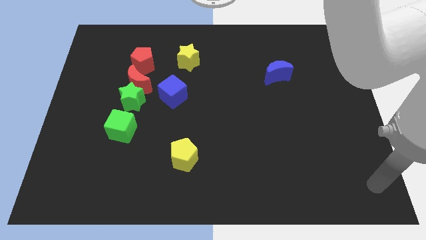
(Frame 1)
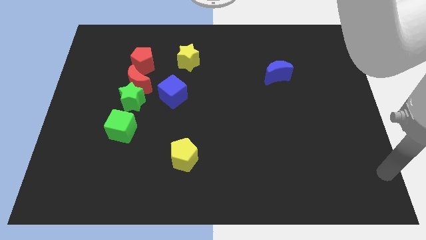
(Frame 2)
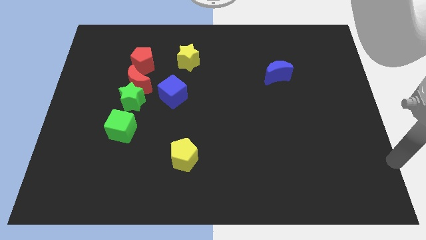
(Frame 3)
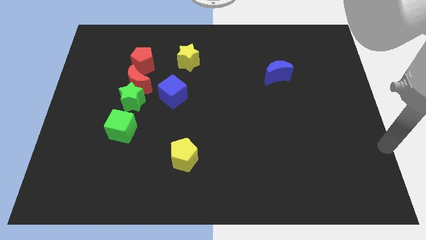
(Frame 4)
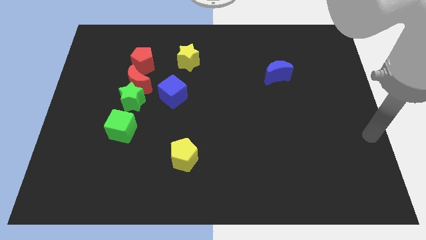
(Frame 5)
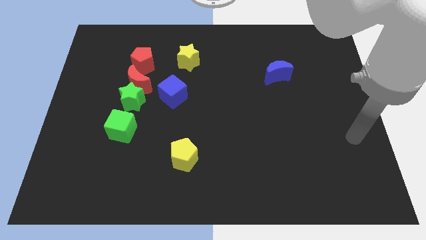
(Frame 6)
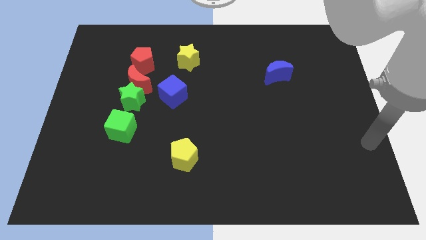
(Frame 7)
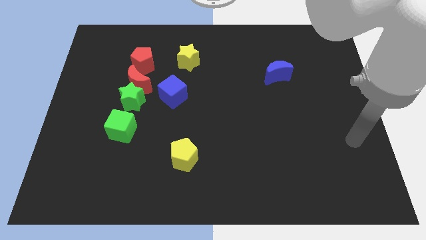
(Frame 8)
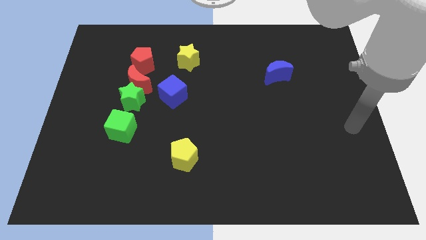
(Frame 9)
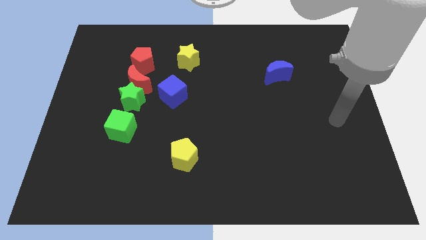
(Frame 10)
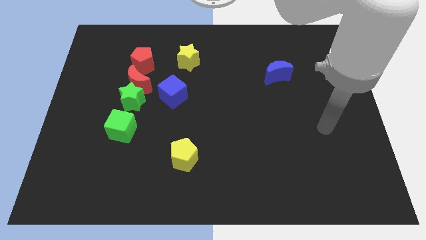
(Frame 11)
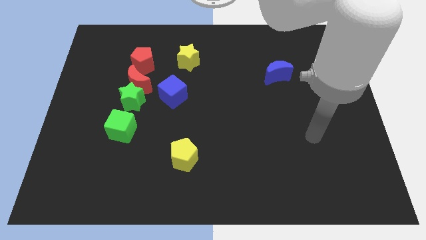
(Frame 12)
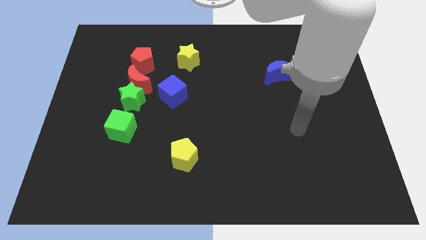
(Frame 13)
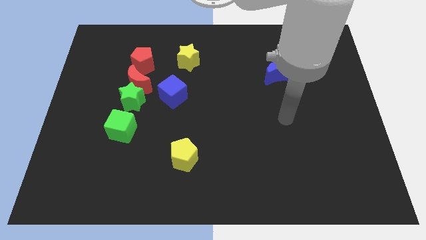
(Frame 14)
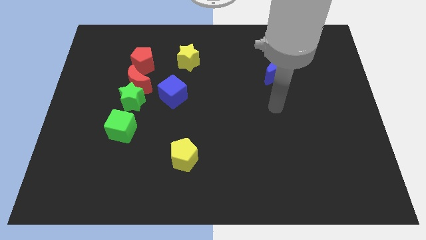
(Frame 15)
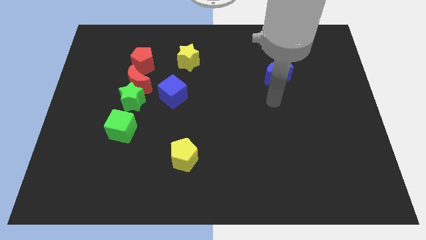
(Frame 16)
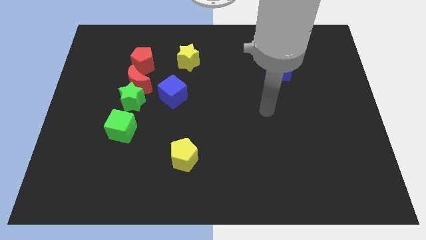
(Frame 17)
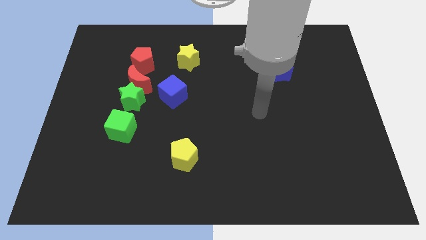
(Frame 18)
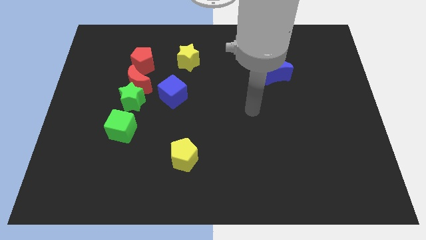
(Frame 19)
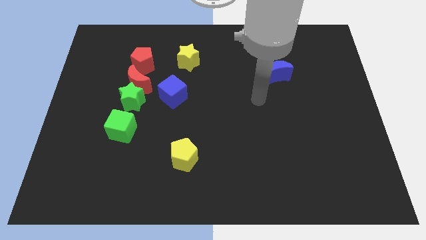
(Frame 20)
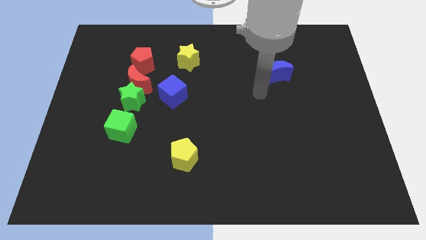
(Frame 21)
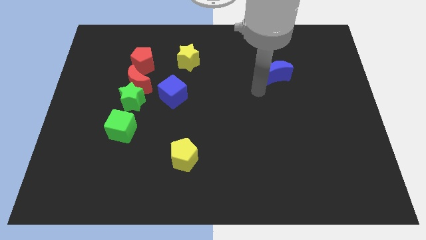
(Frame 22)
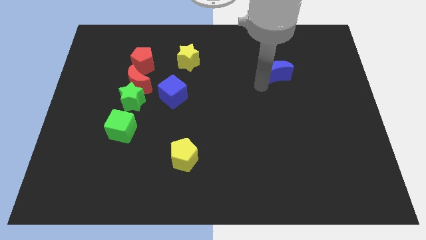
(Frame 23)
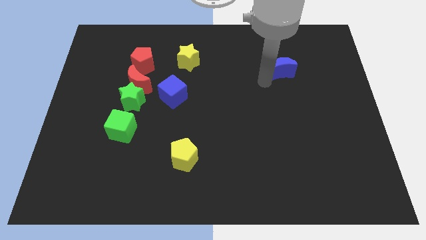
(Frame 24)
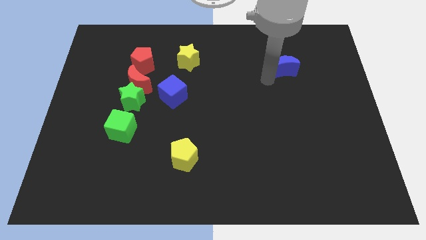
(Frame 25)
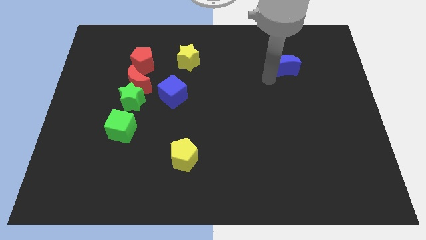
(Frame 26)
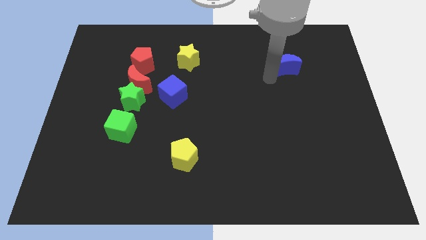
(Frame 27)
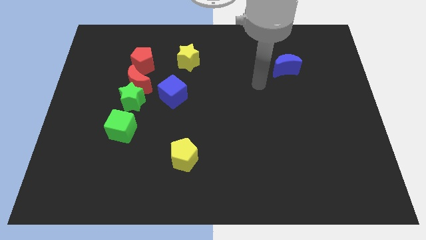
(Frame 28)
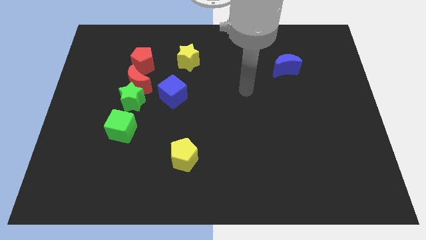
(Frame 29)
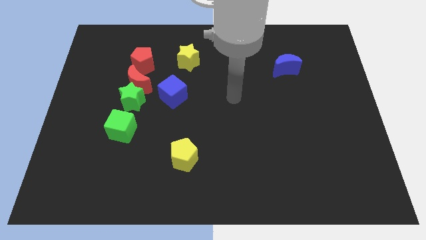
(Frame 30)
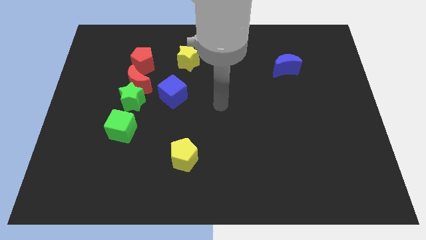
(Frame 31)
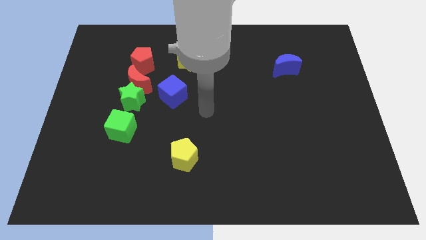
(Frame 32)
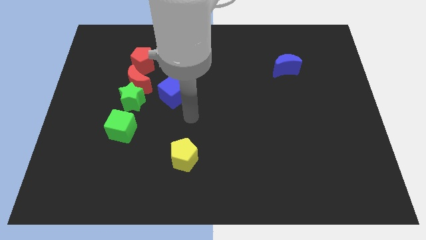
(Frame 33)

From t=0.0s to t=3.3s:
move the blue crescent diagonally on the top right side of the blue cube

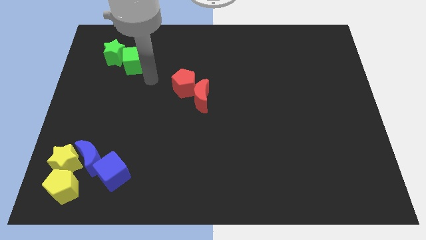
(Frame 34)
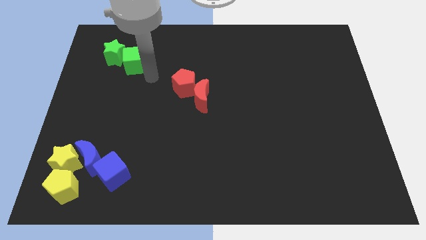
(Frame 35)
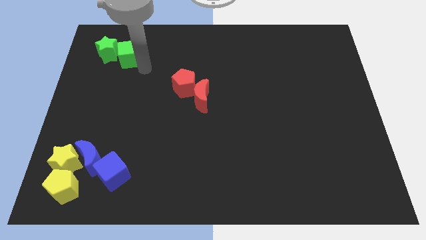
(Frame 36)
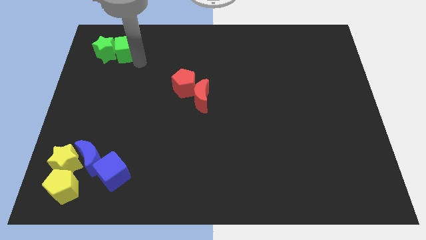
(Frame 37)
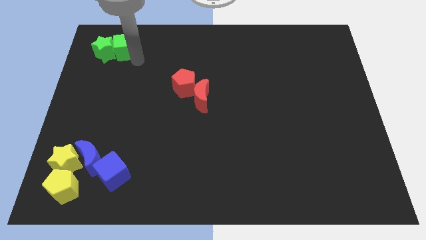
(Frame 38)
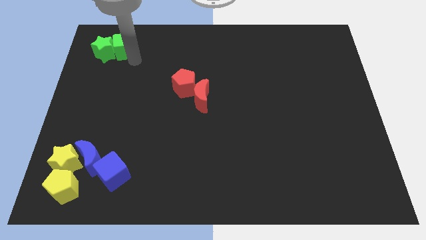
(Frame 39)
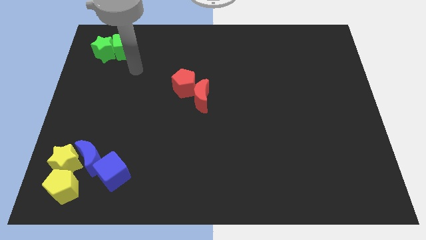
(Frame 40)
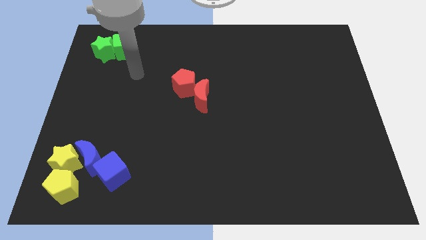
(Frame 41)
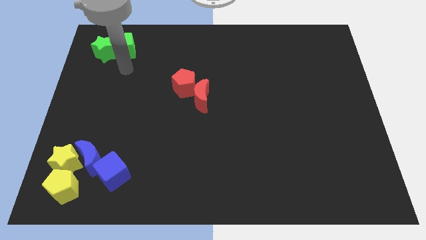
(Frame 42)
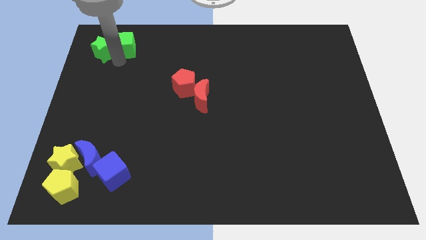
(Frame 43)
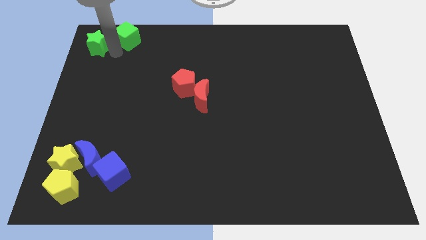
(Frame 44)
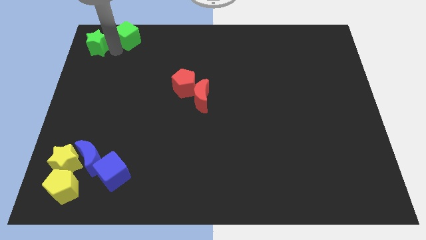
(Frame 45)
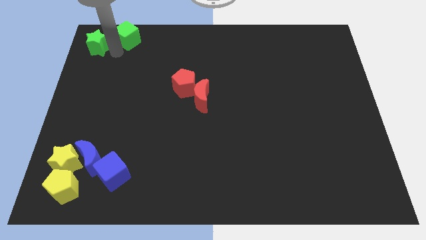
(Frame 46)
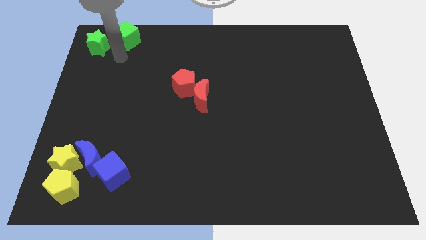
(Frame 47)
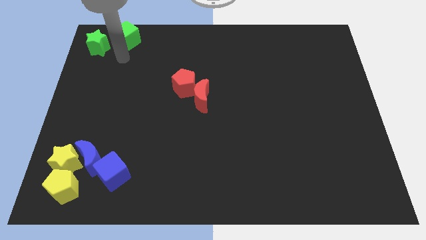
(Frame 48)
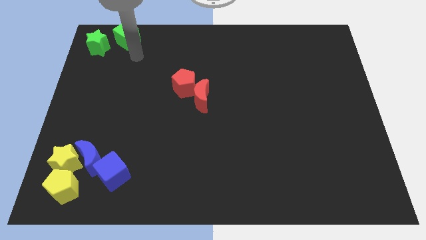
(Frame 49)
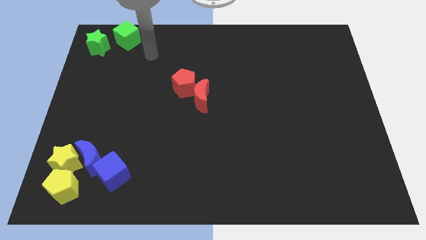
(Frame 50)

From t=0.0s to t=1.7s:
push the green cube along with green star towards the top left of the board

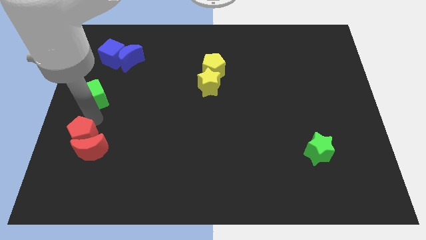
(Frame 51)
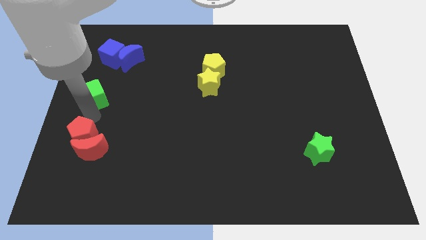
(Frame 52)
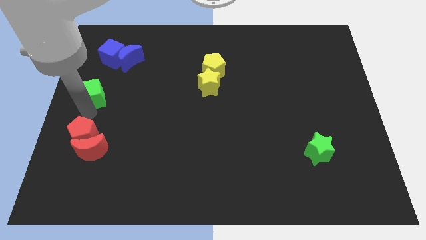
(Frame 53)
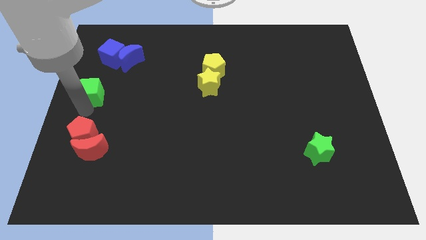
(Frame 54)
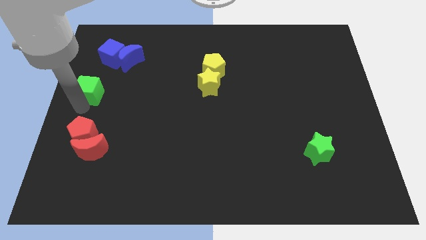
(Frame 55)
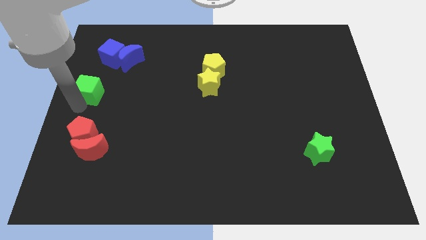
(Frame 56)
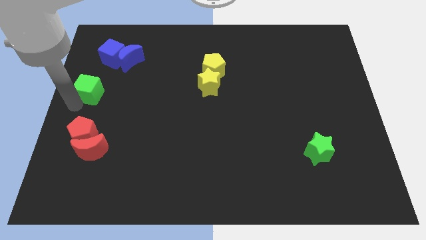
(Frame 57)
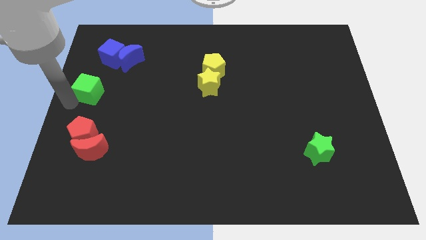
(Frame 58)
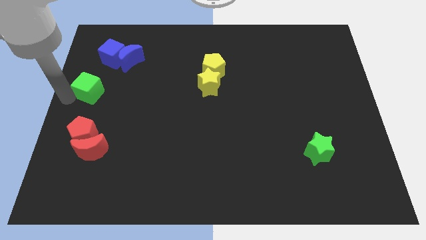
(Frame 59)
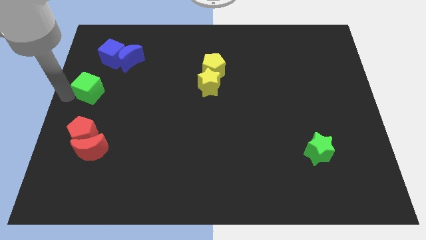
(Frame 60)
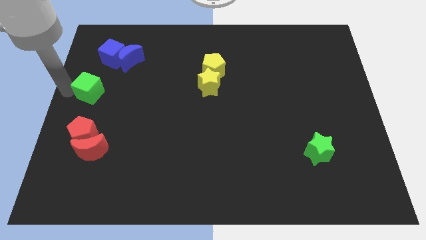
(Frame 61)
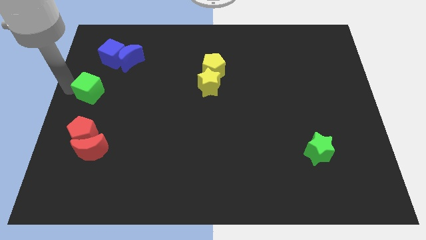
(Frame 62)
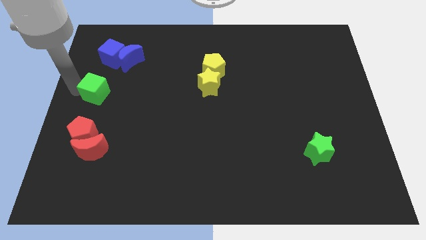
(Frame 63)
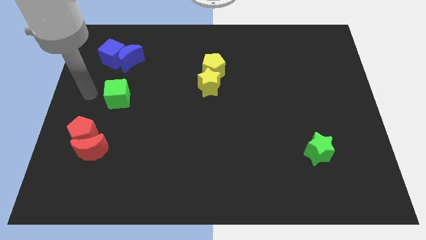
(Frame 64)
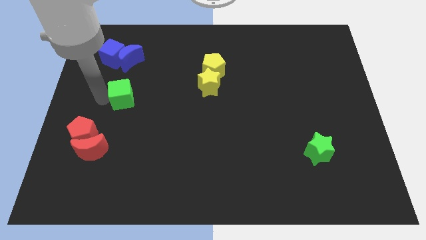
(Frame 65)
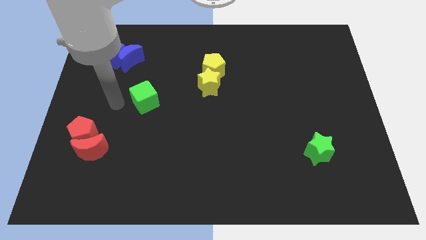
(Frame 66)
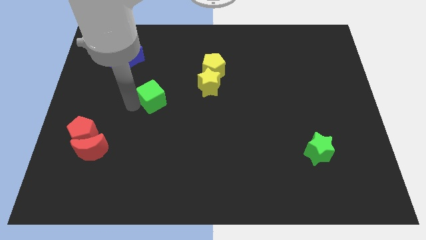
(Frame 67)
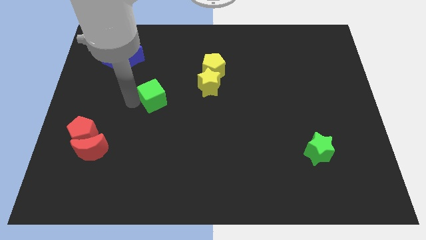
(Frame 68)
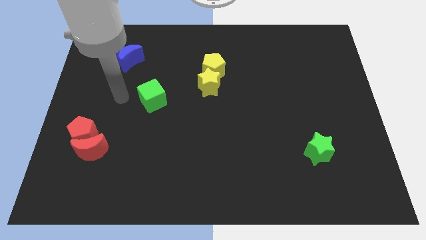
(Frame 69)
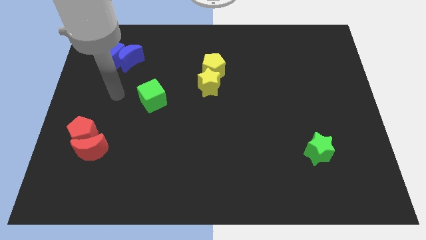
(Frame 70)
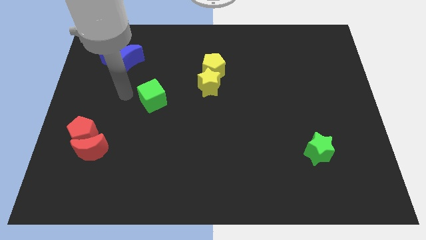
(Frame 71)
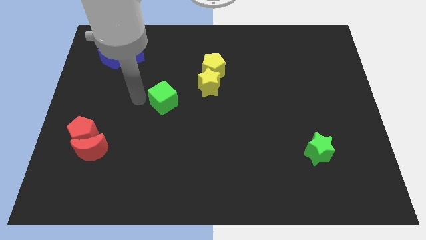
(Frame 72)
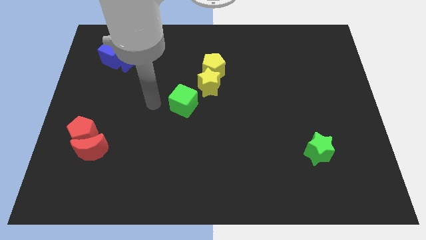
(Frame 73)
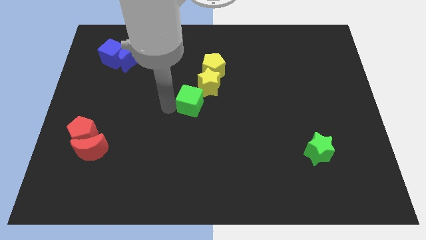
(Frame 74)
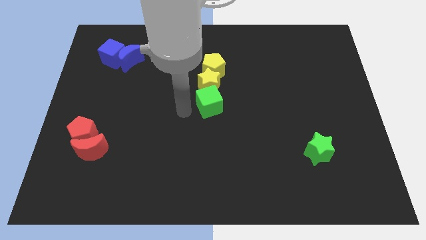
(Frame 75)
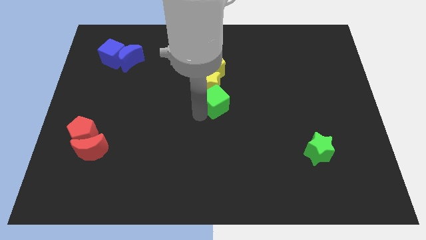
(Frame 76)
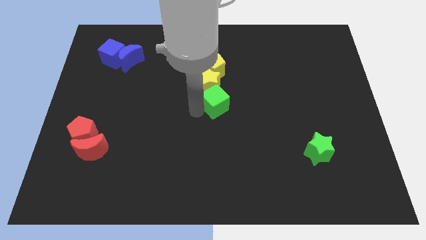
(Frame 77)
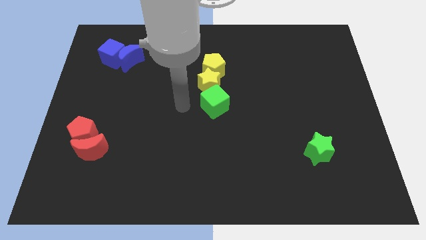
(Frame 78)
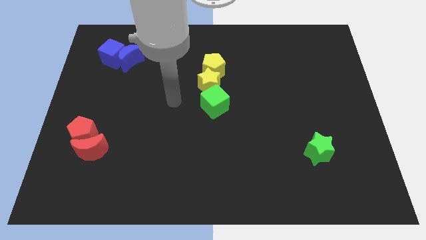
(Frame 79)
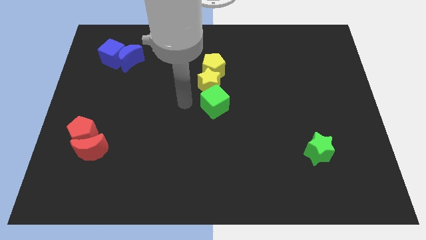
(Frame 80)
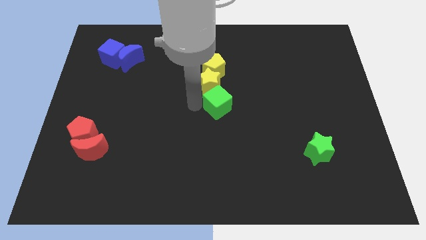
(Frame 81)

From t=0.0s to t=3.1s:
move the green cube to the center of the board

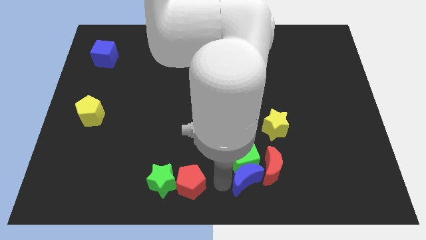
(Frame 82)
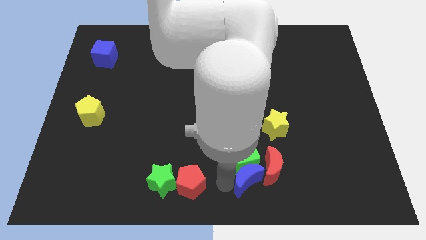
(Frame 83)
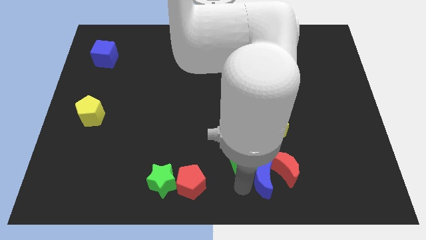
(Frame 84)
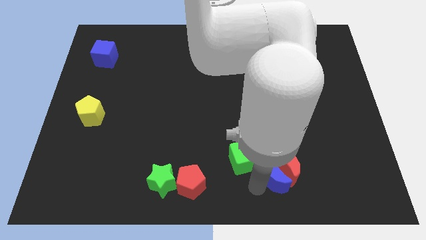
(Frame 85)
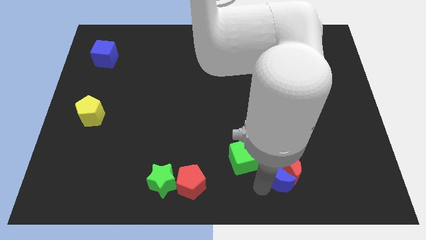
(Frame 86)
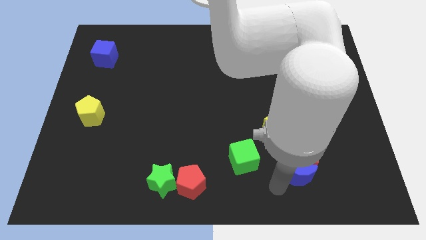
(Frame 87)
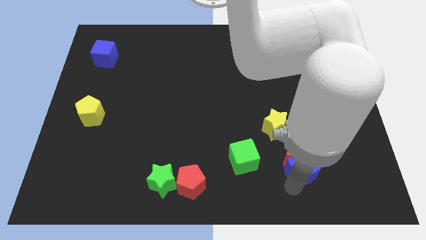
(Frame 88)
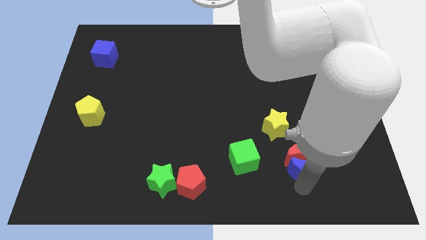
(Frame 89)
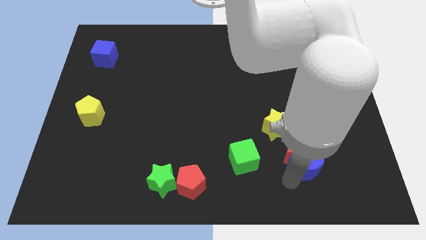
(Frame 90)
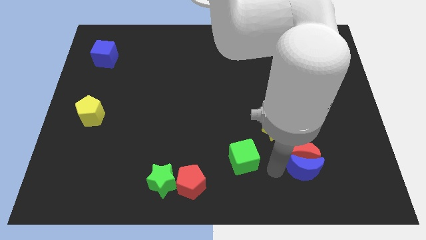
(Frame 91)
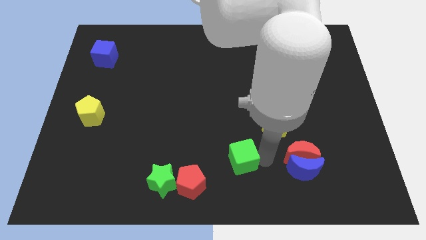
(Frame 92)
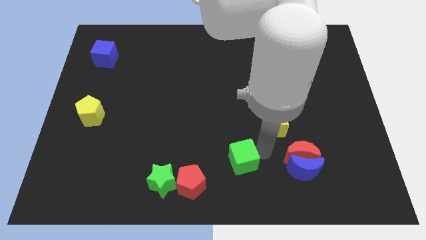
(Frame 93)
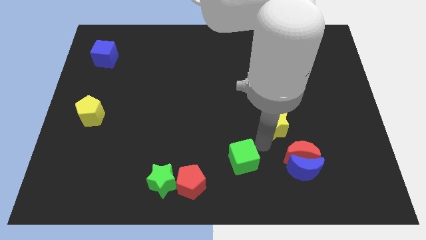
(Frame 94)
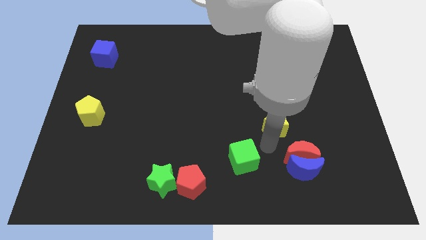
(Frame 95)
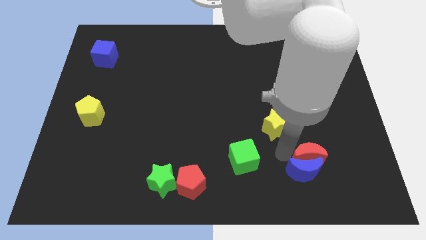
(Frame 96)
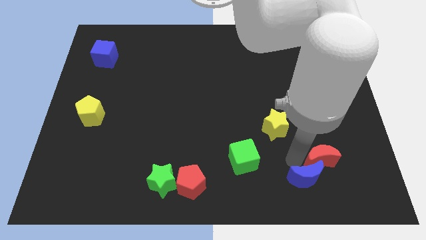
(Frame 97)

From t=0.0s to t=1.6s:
separate the red and blue moona together to the right
